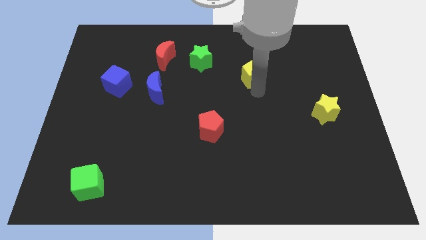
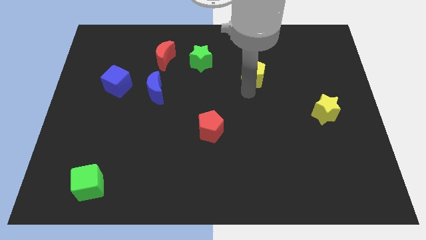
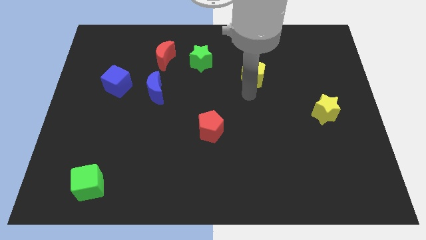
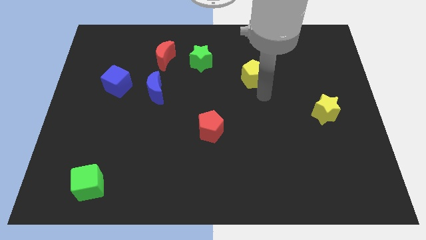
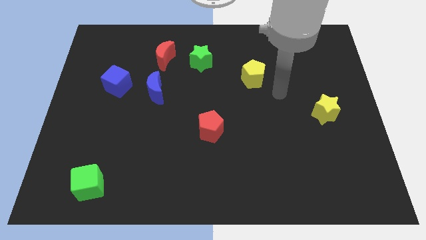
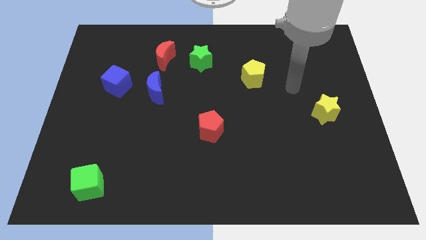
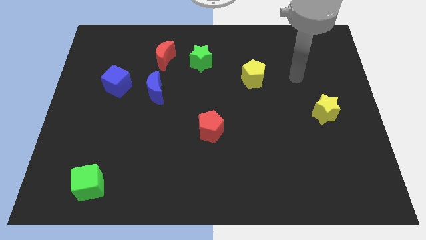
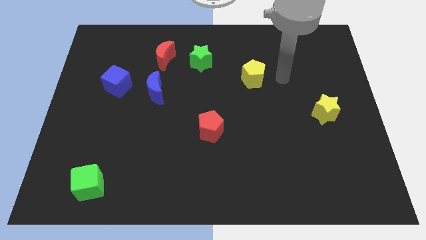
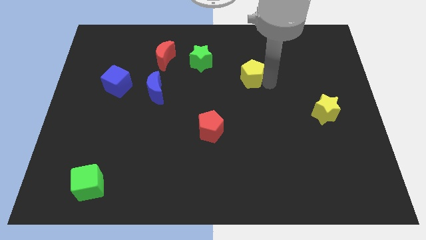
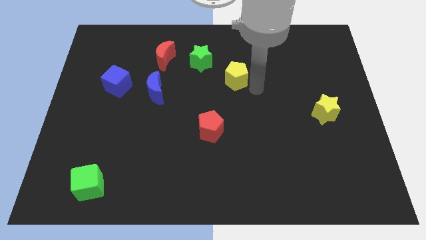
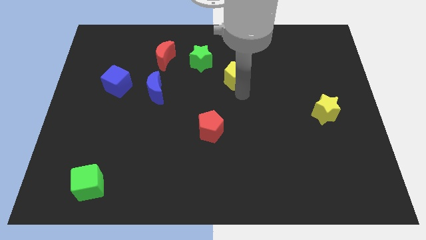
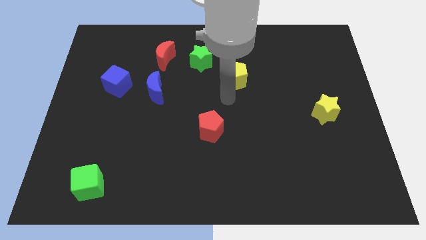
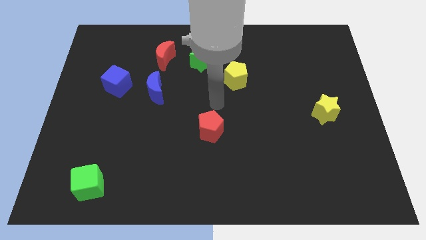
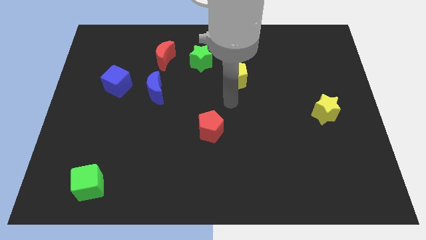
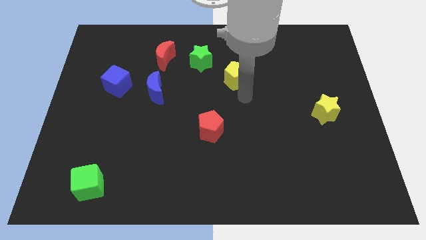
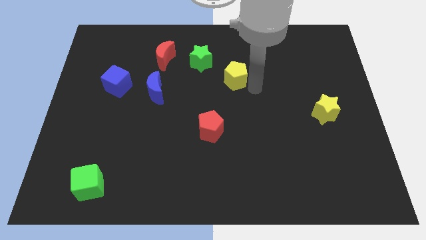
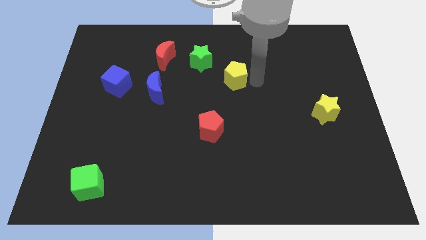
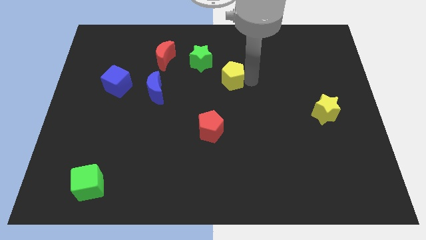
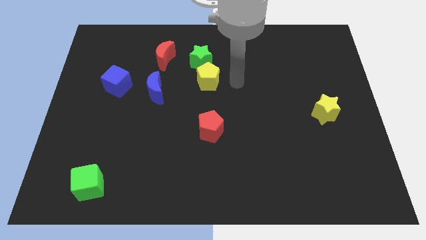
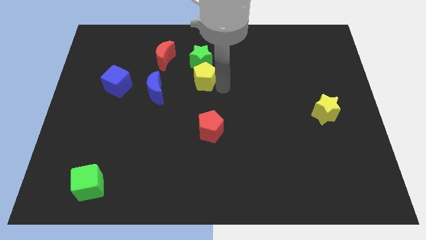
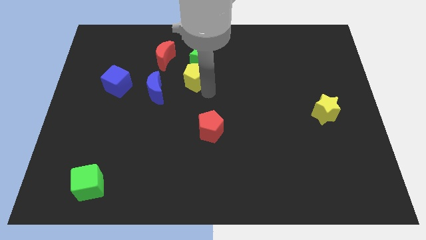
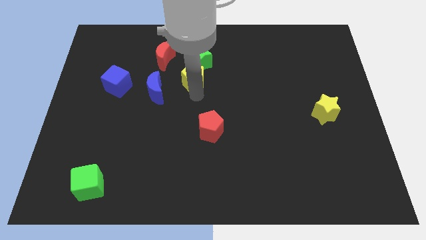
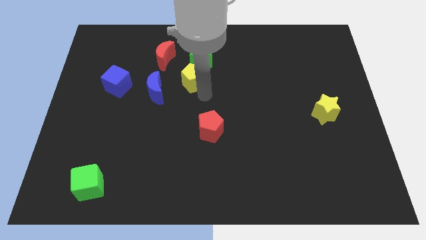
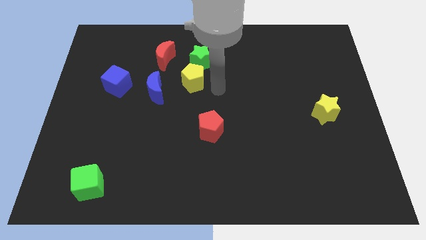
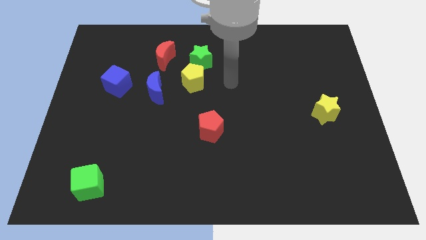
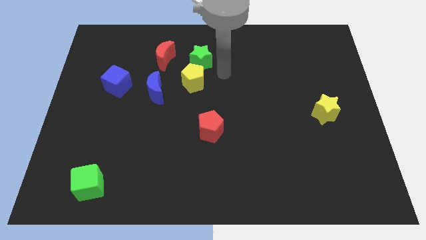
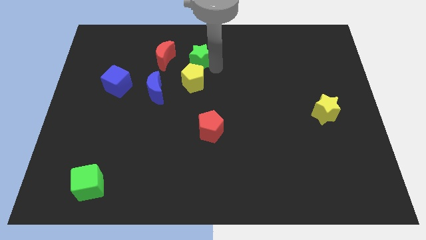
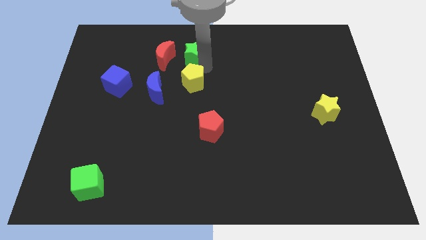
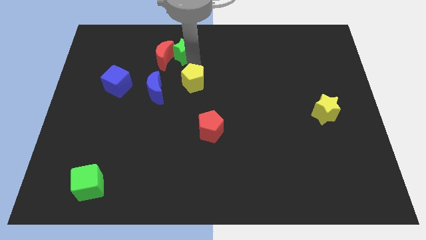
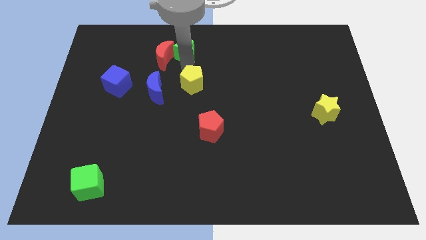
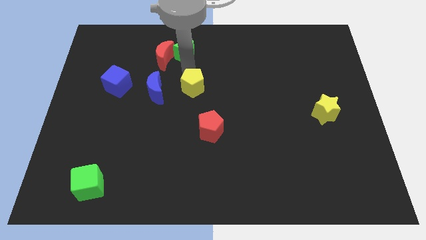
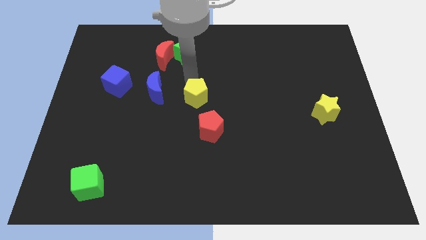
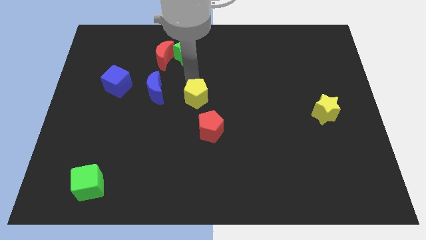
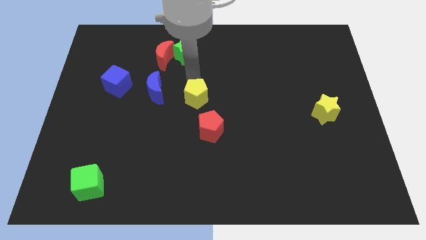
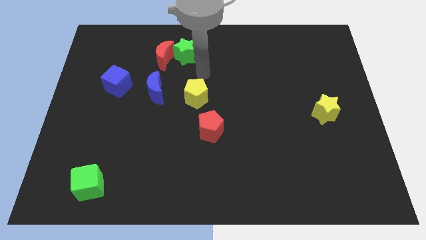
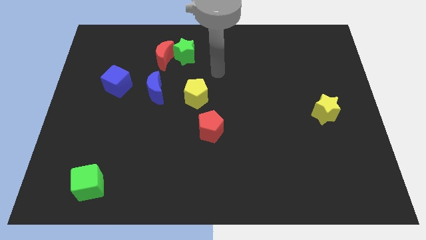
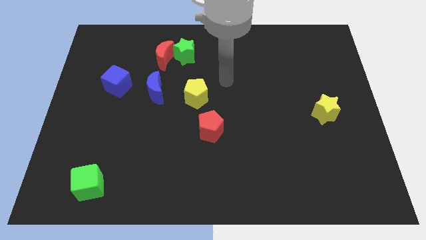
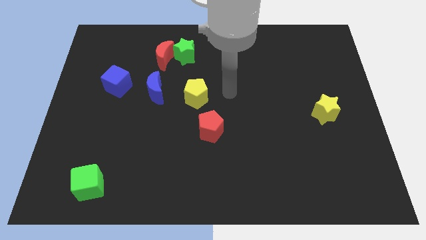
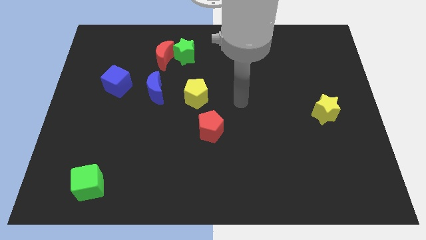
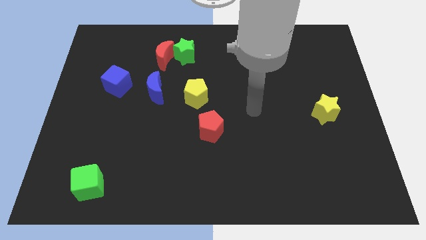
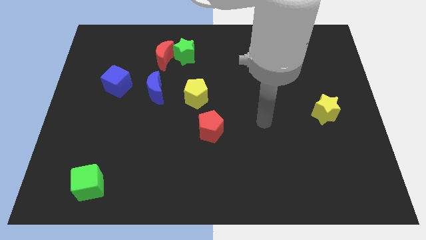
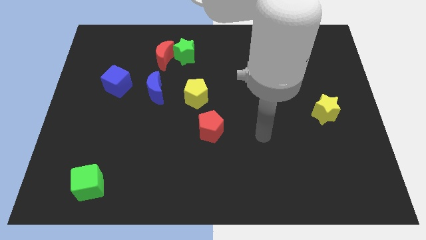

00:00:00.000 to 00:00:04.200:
move the yellow pentagon towards red pentagon

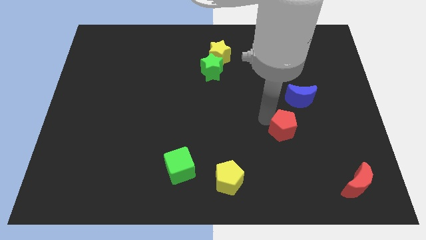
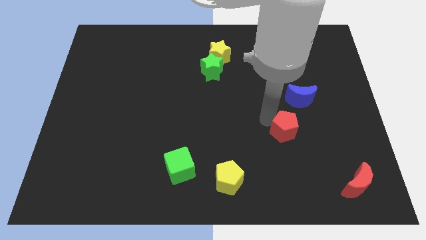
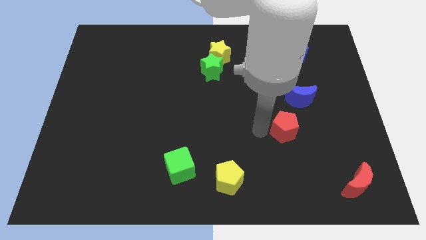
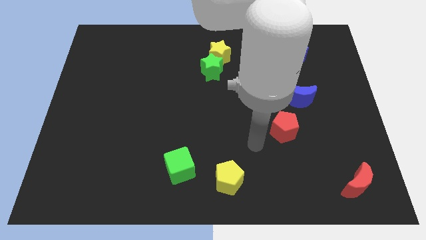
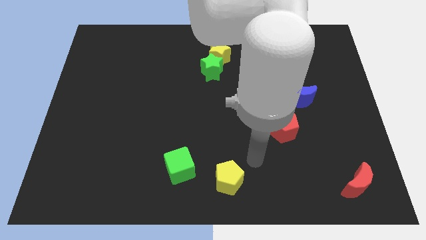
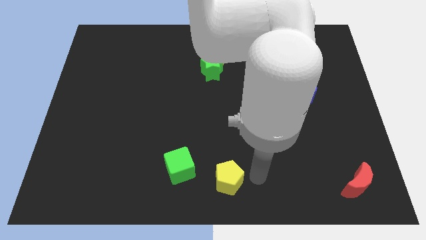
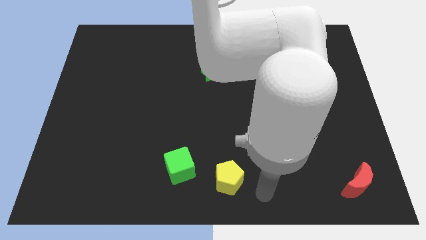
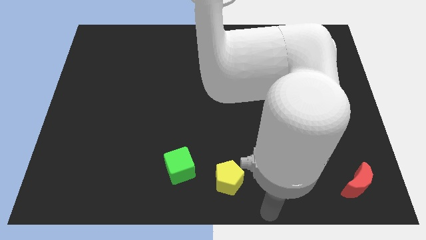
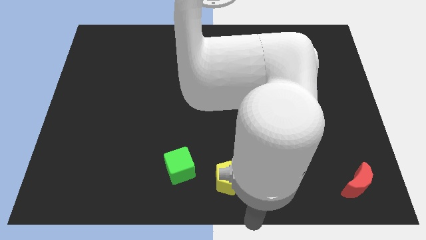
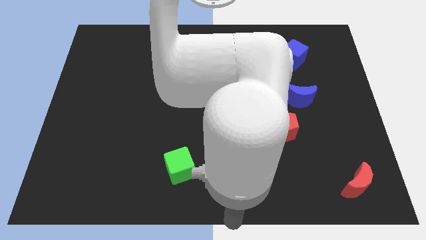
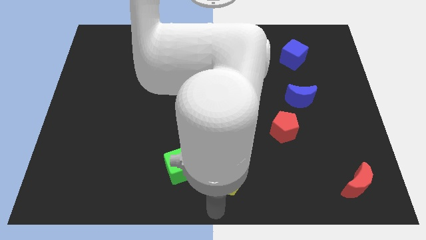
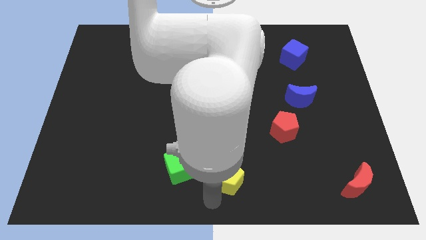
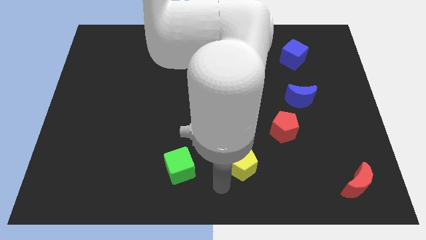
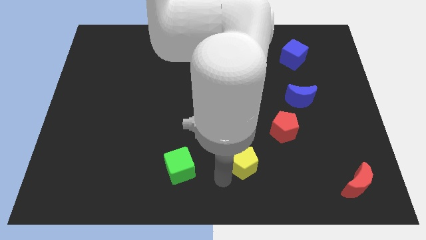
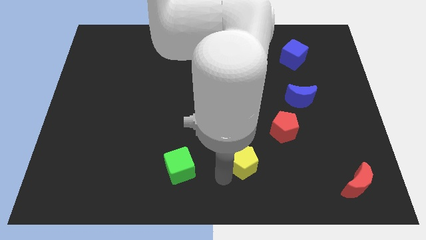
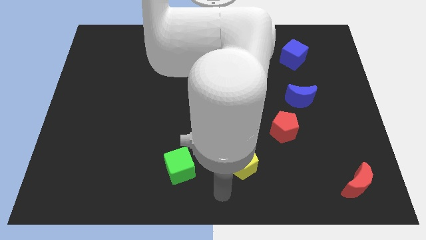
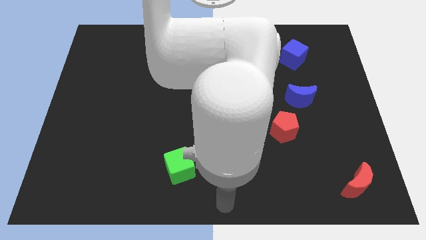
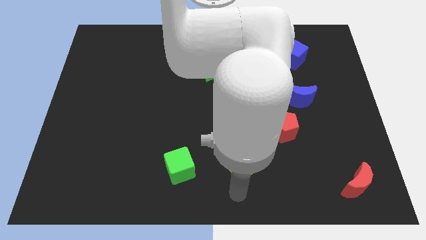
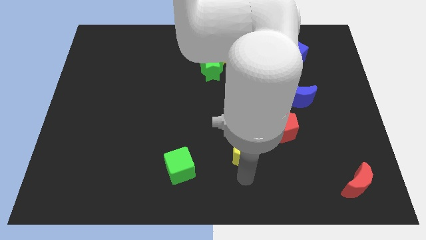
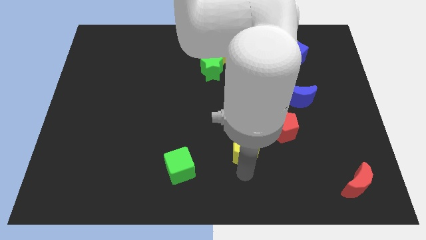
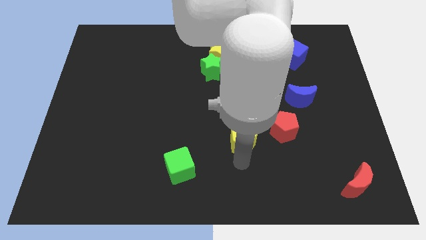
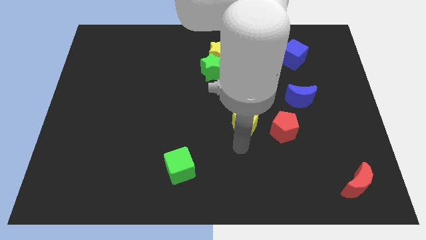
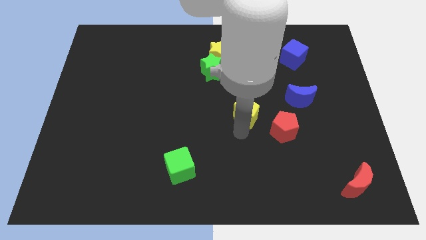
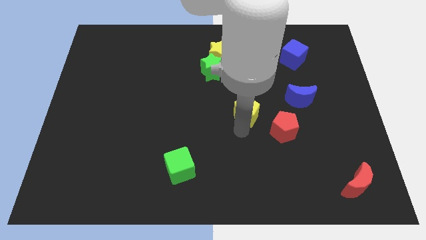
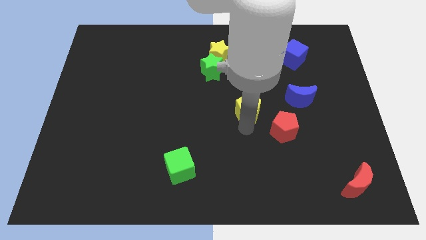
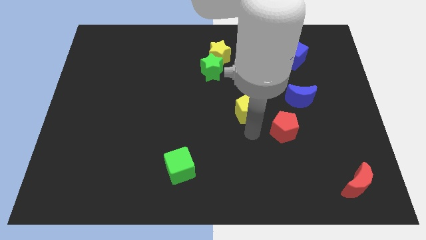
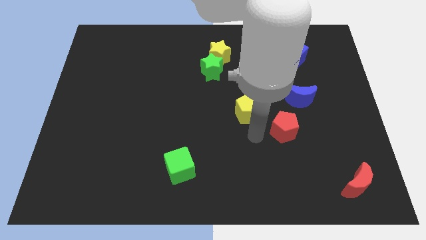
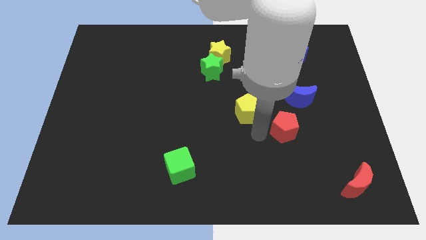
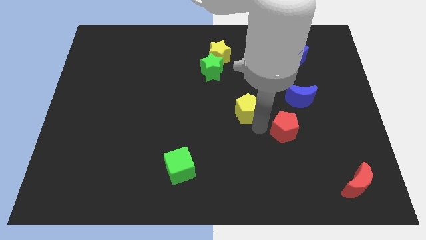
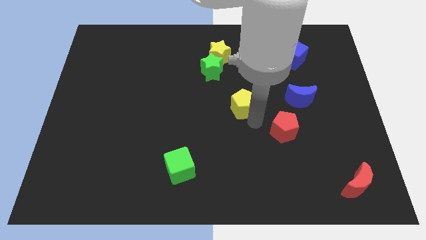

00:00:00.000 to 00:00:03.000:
slightly move the yellow pentagon to the center of the board

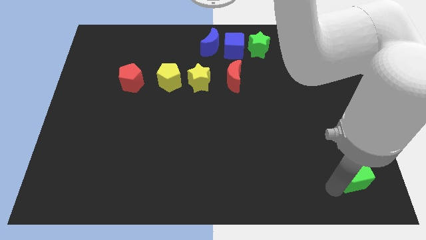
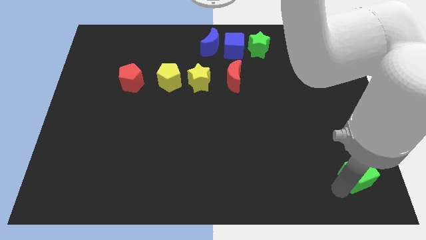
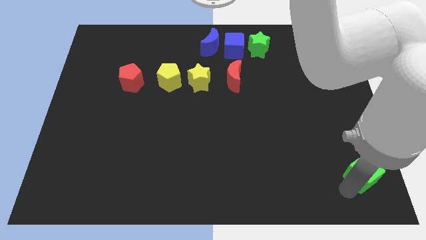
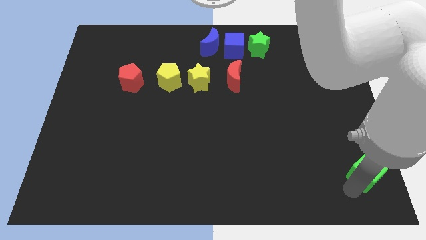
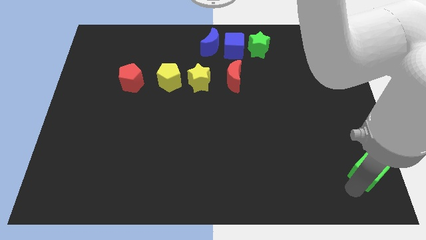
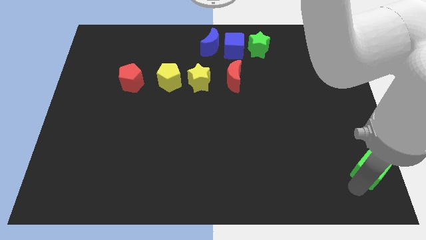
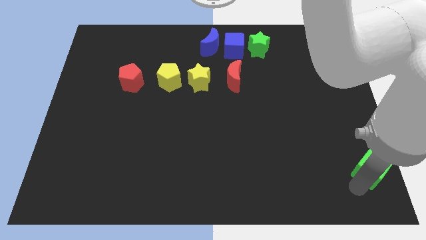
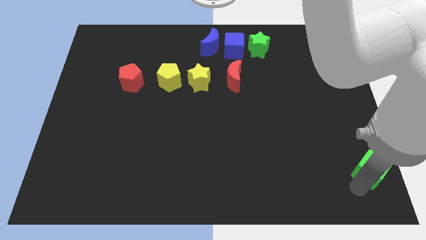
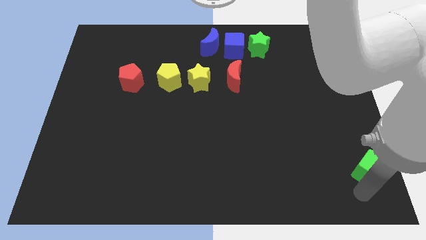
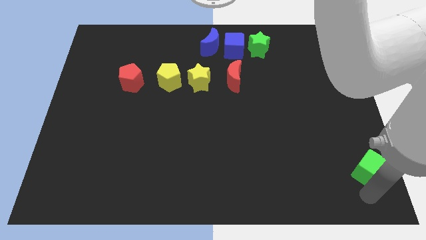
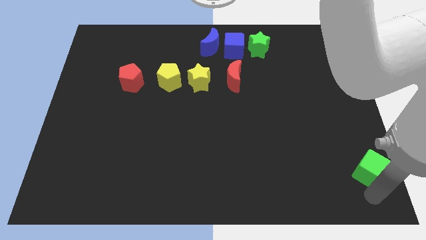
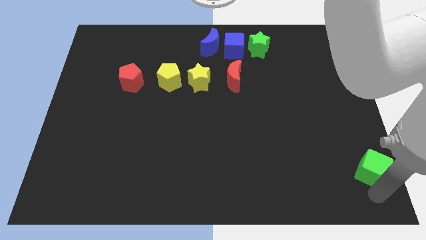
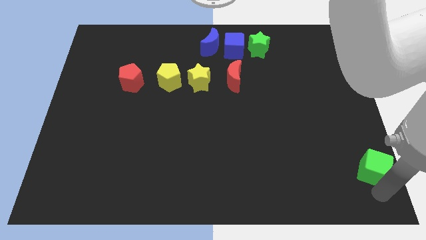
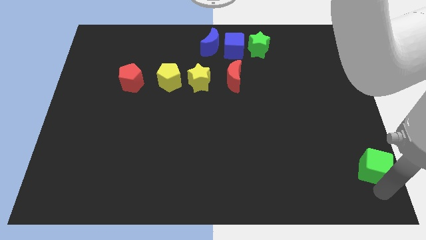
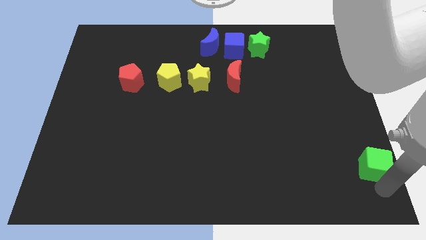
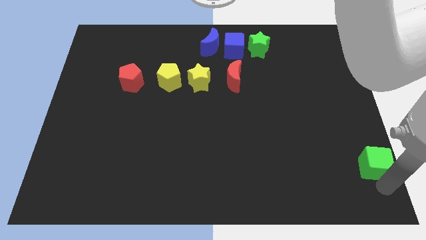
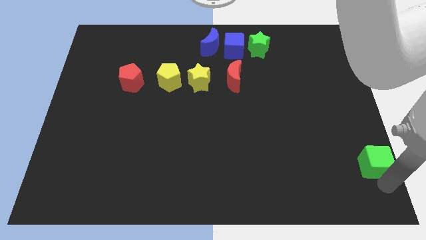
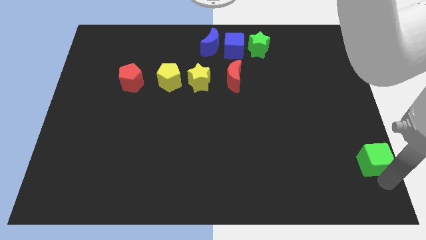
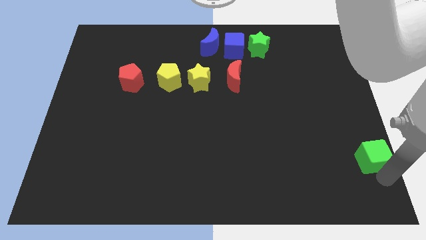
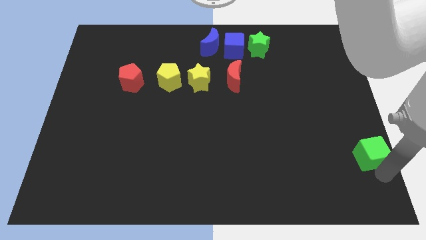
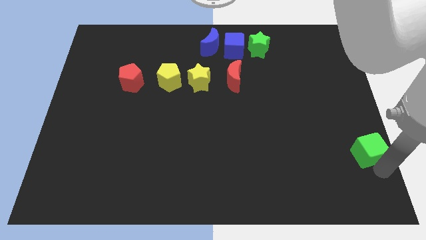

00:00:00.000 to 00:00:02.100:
push the green cube slightly to the top side of the board
